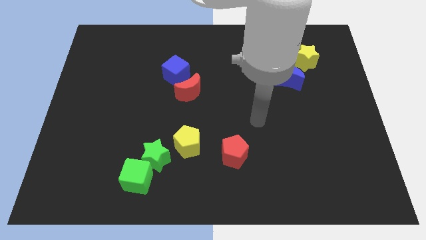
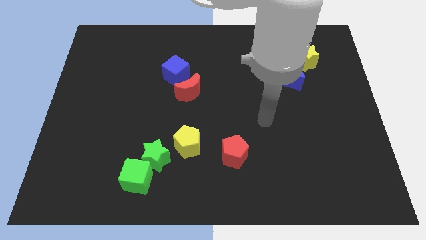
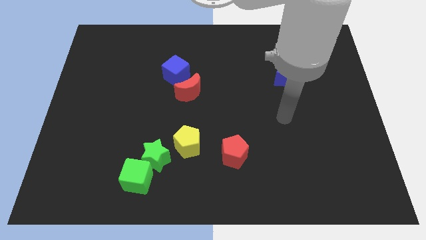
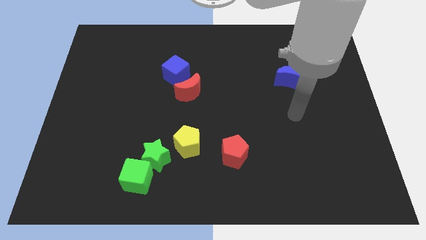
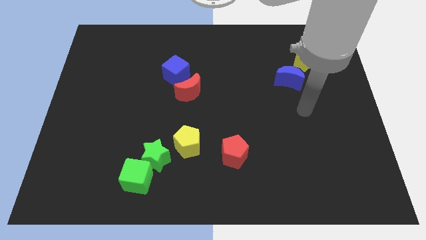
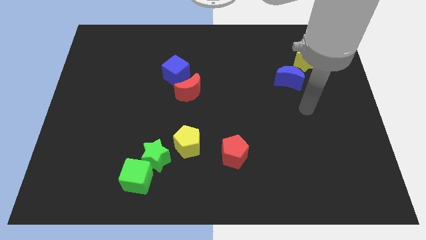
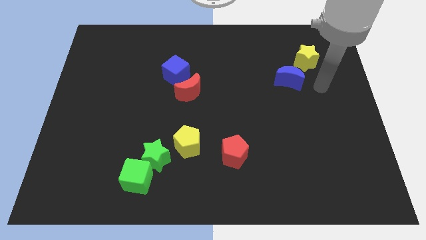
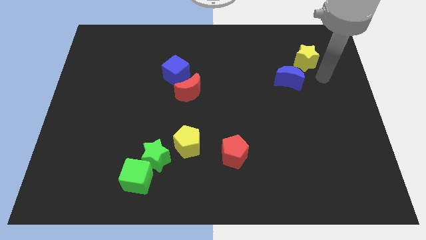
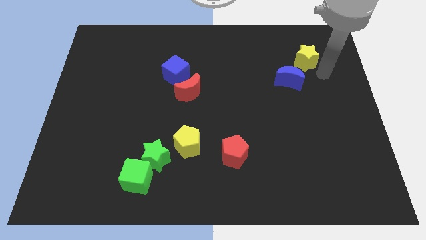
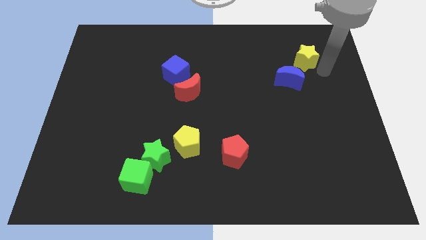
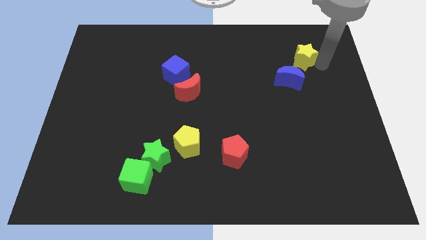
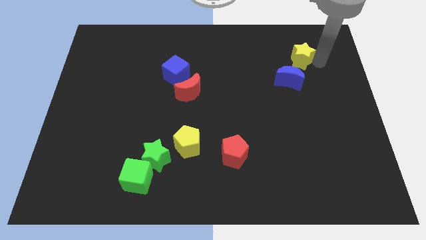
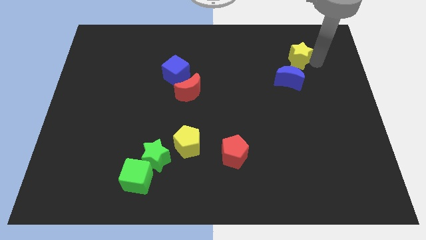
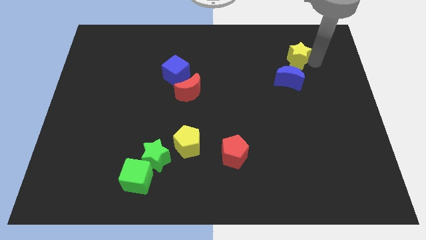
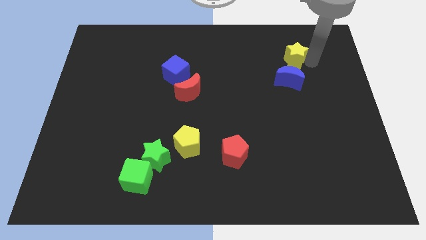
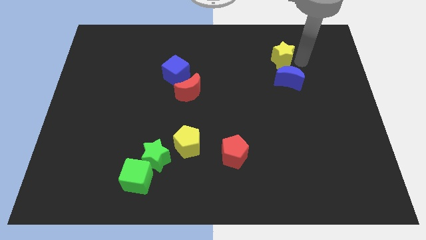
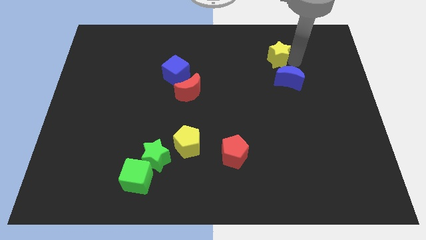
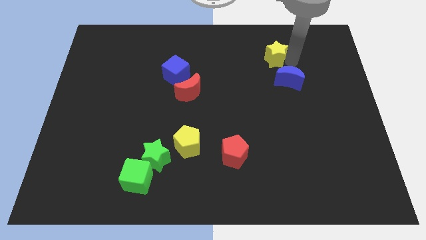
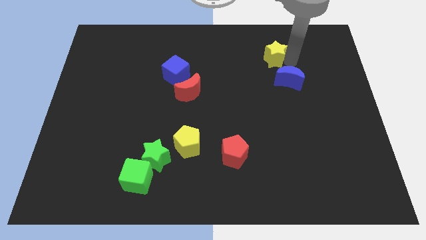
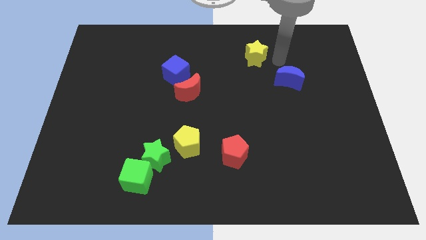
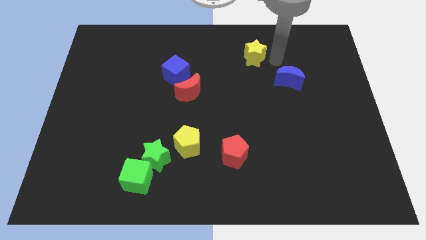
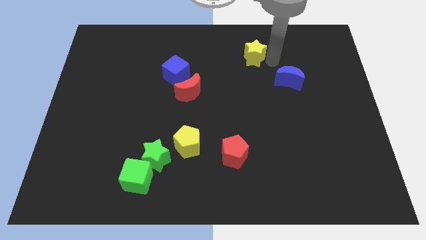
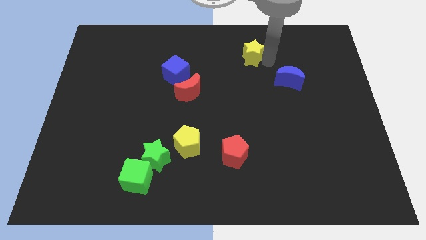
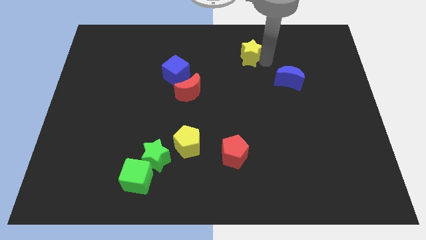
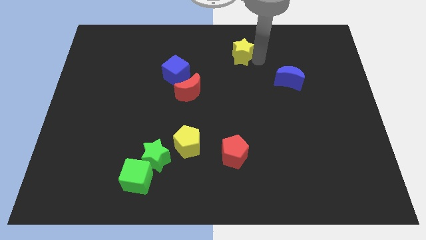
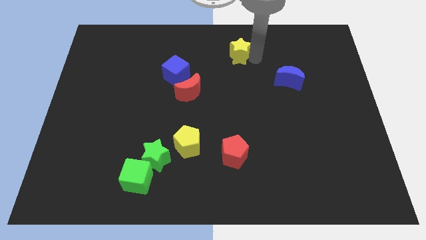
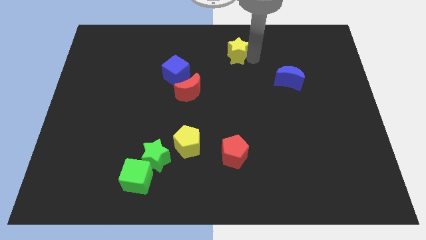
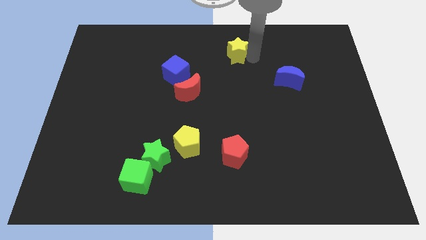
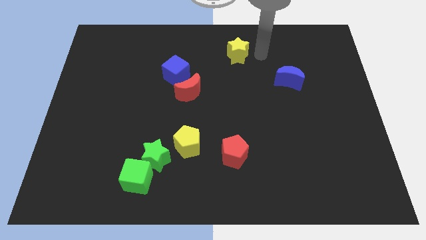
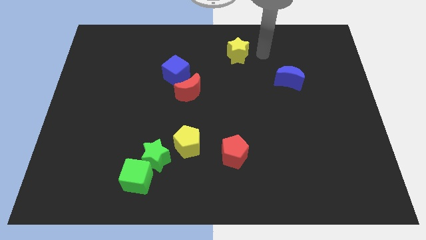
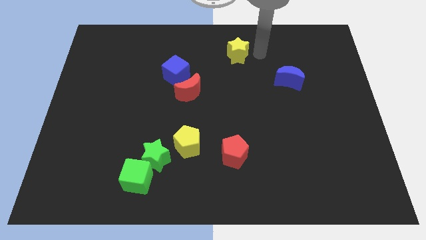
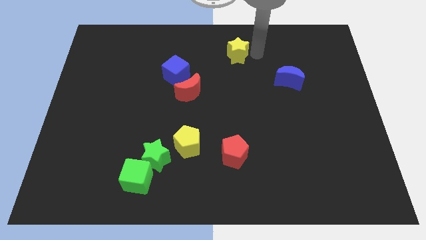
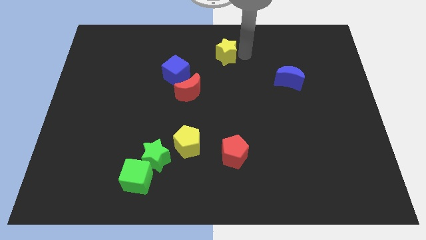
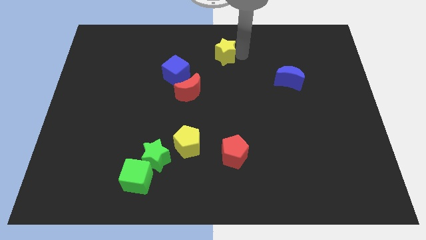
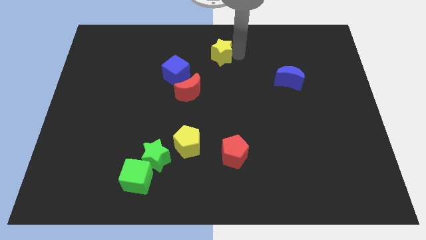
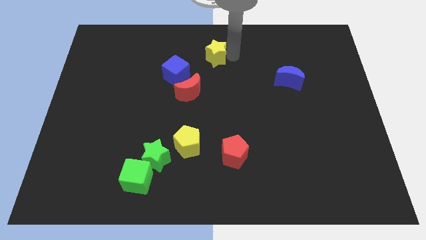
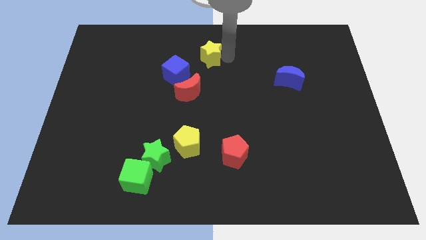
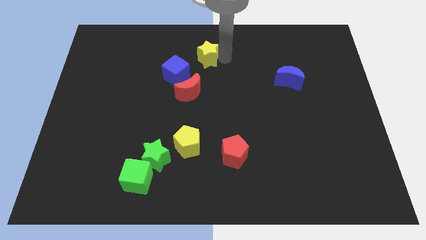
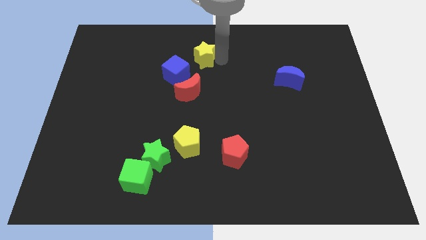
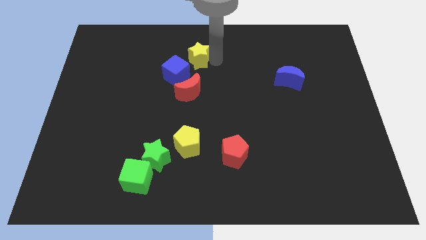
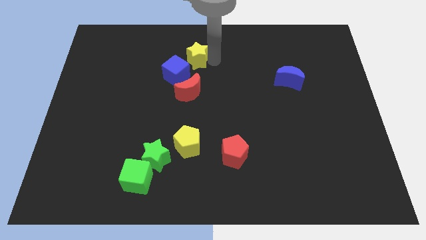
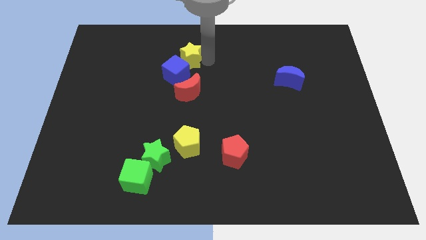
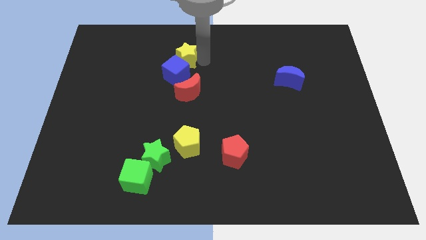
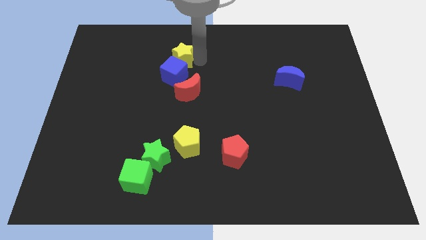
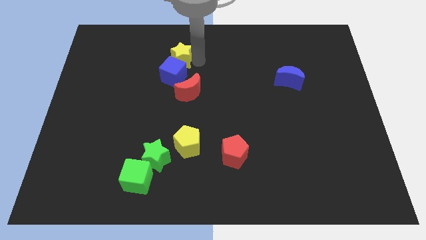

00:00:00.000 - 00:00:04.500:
put the yellow star towards the blue cube

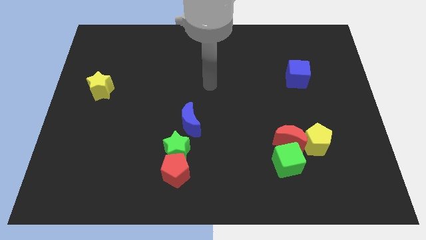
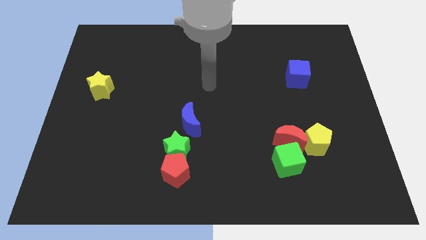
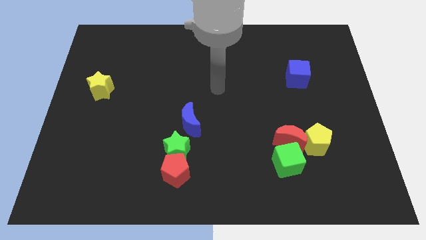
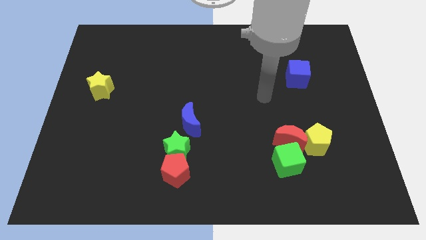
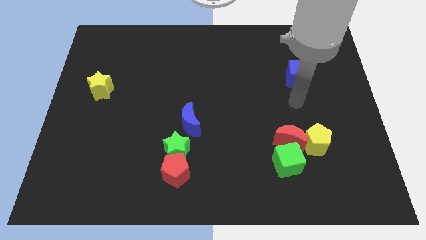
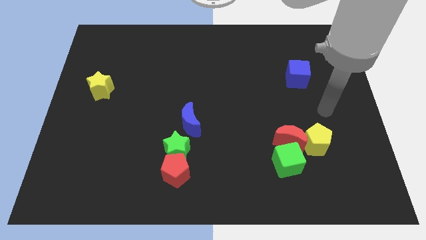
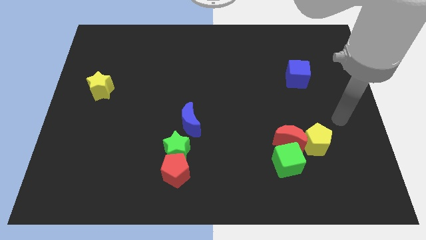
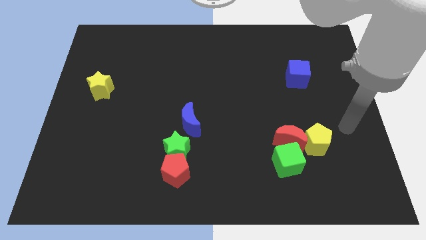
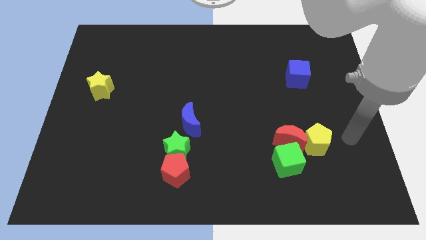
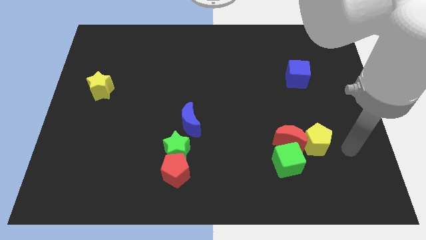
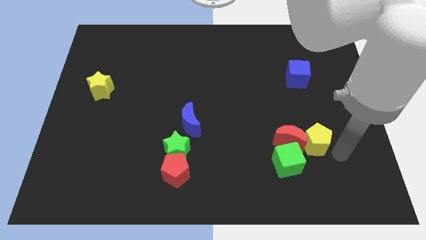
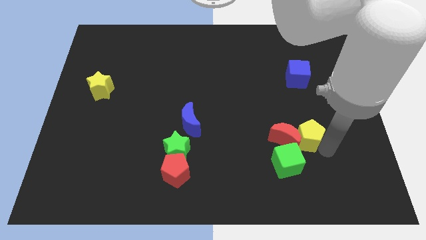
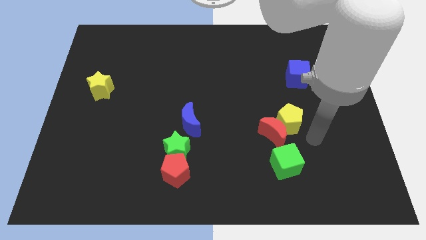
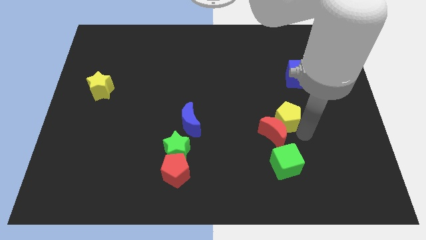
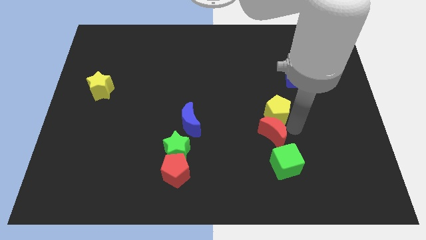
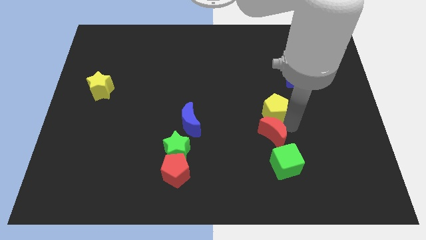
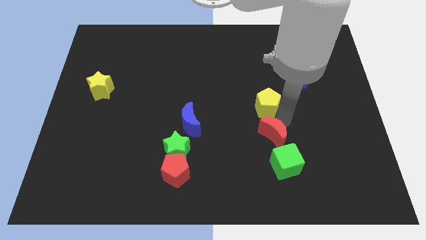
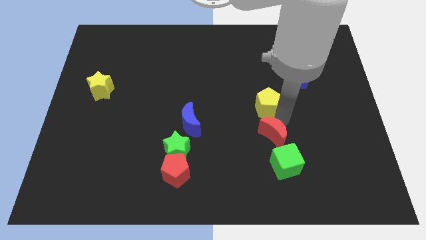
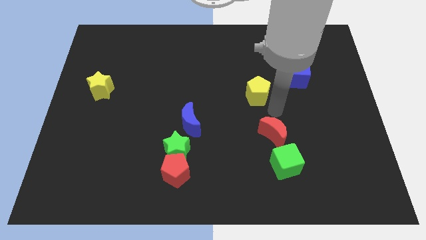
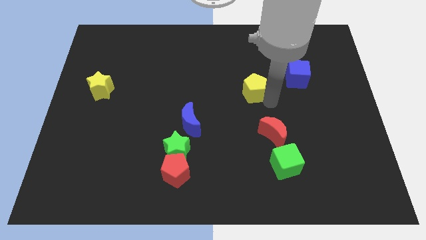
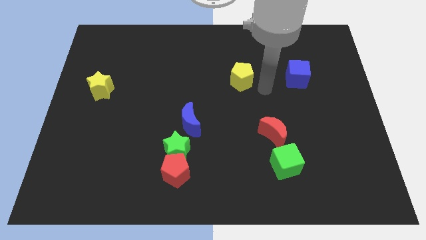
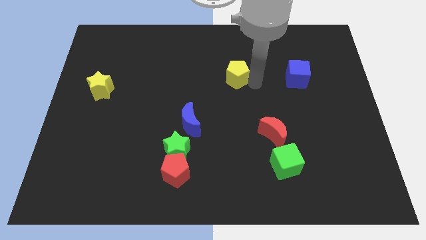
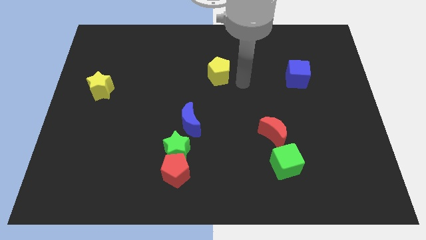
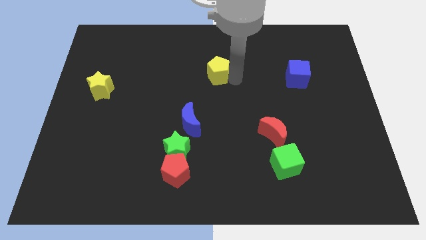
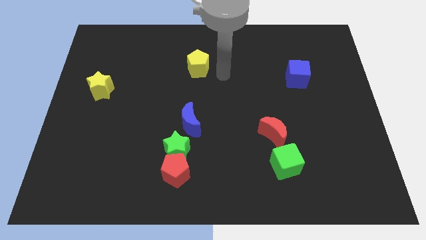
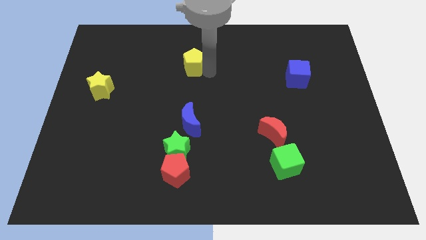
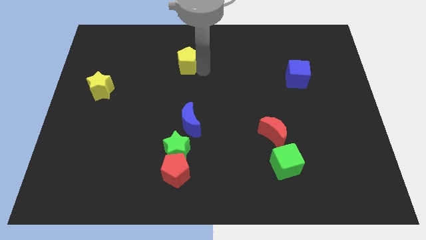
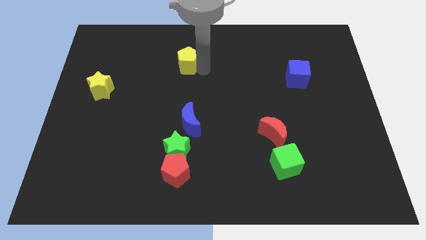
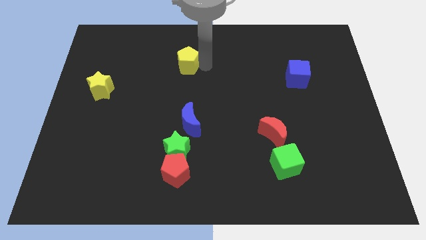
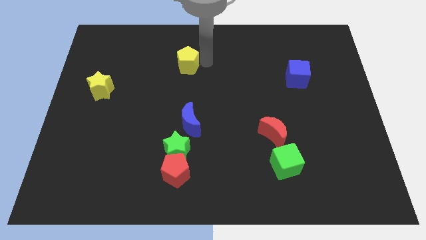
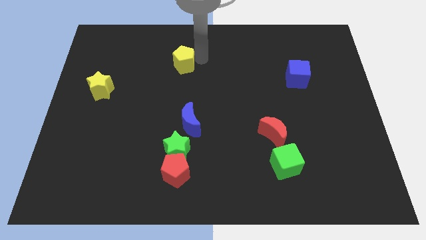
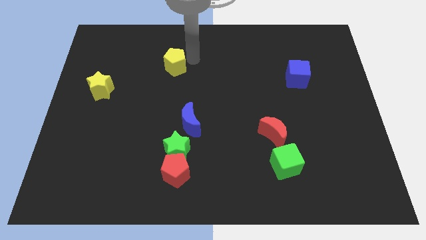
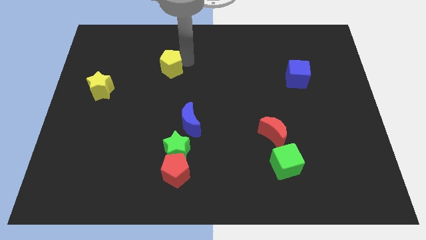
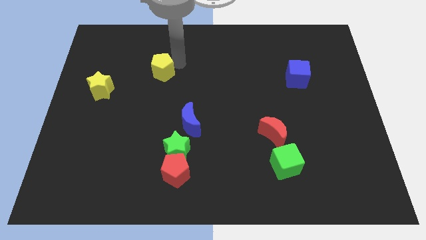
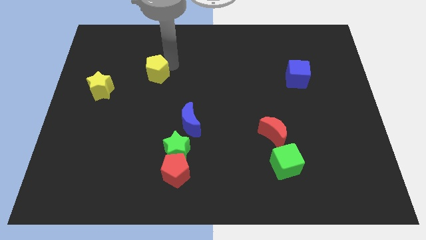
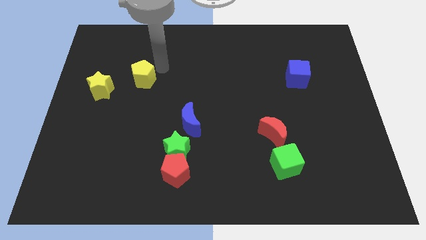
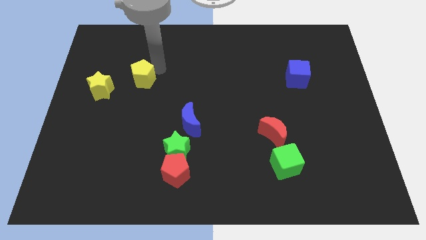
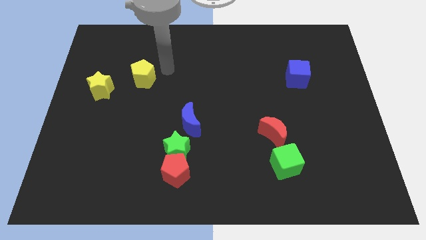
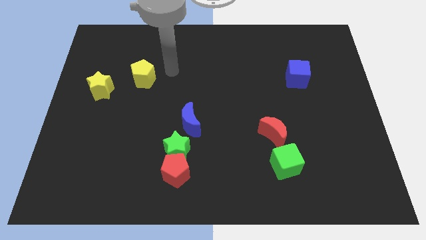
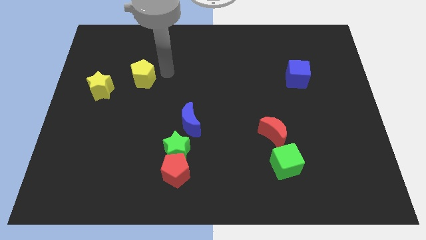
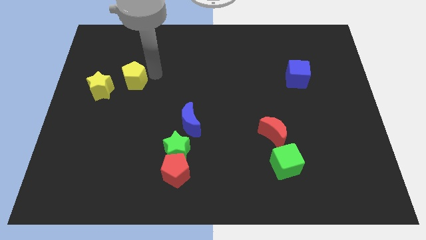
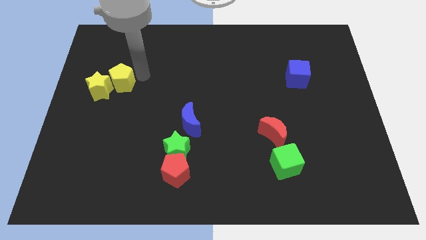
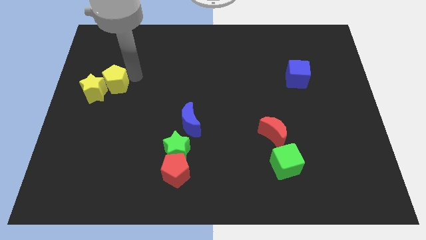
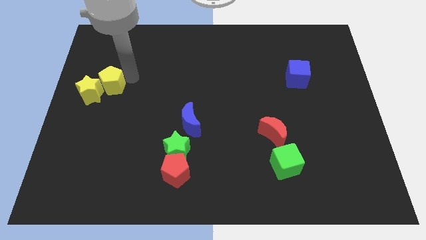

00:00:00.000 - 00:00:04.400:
push the yellow pentagon towards the yellow star
